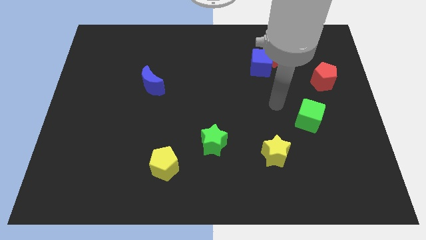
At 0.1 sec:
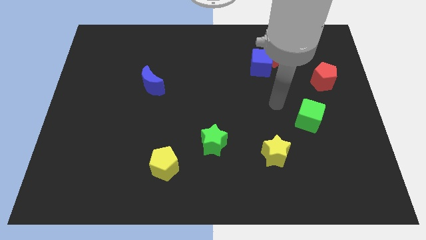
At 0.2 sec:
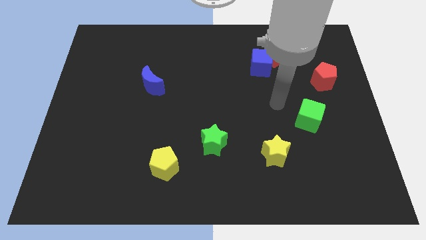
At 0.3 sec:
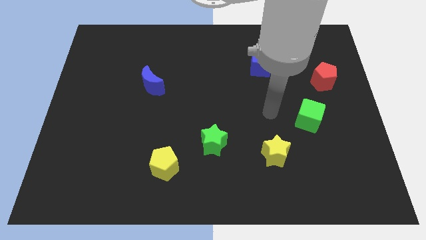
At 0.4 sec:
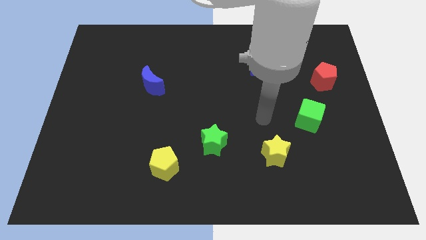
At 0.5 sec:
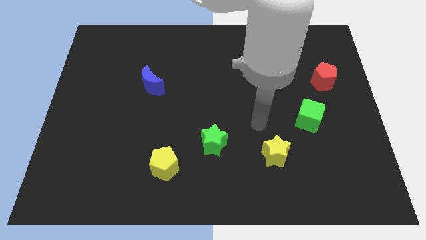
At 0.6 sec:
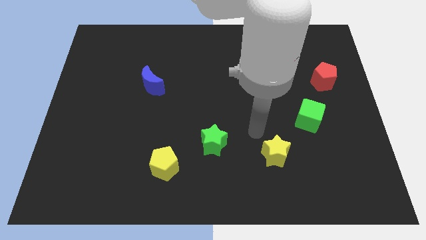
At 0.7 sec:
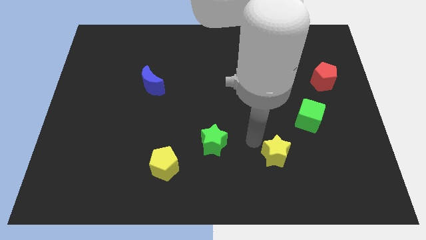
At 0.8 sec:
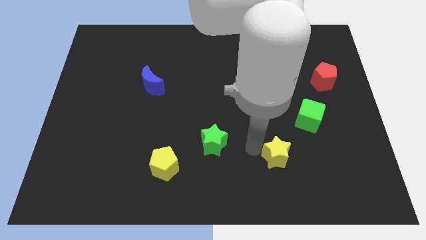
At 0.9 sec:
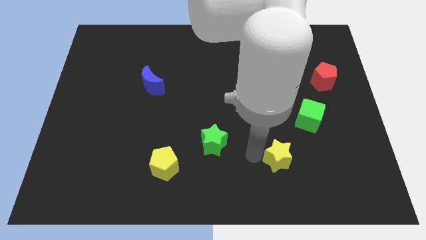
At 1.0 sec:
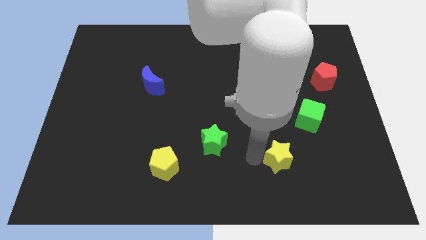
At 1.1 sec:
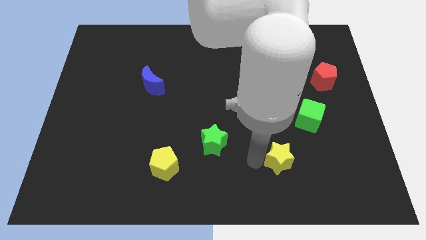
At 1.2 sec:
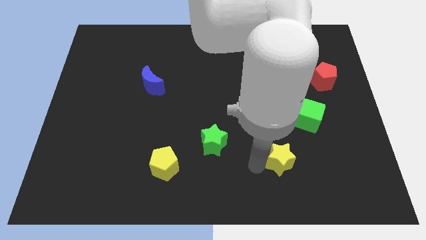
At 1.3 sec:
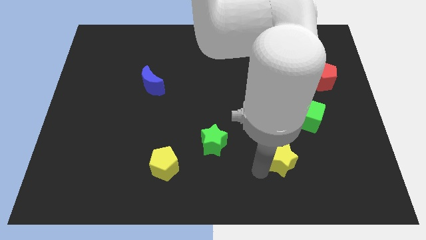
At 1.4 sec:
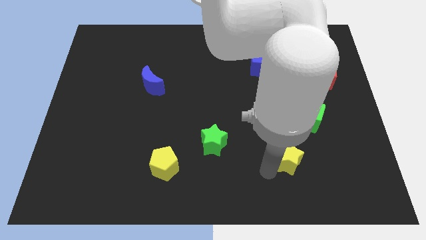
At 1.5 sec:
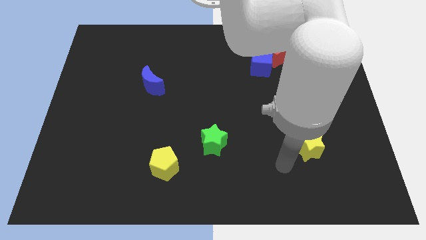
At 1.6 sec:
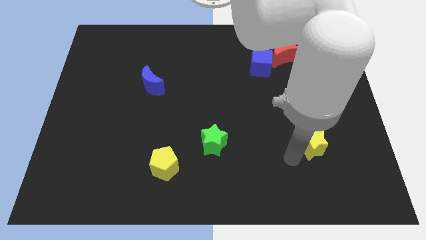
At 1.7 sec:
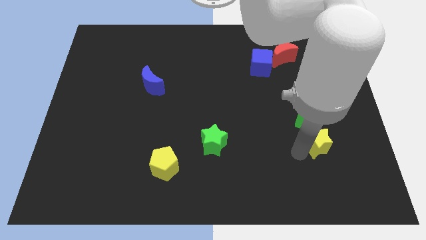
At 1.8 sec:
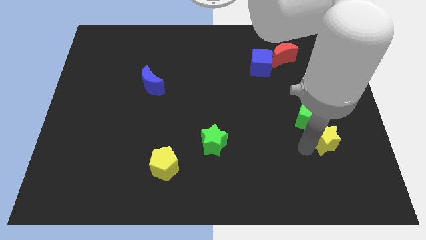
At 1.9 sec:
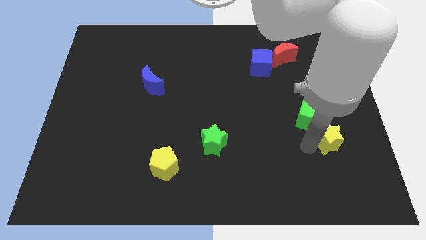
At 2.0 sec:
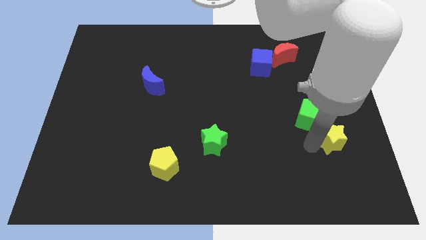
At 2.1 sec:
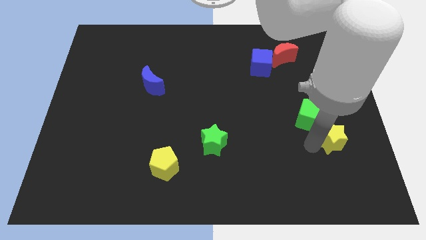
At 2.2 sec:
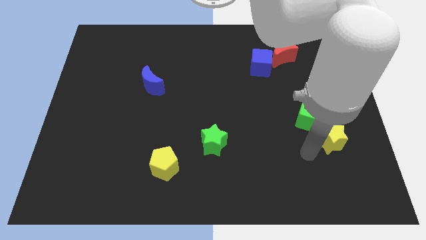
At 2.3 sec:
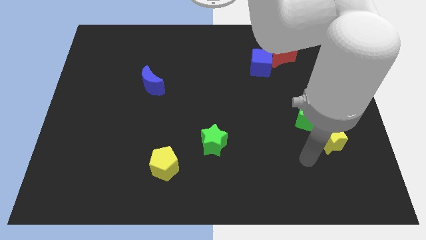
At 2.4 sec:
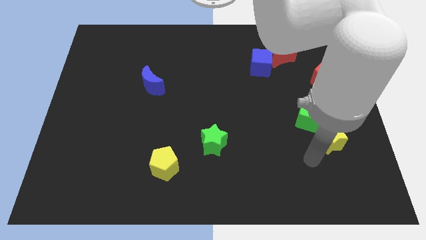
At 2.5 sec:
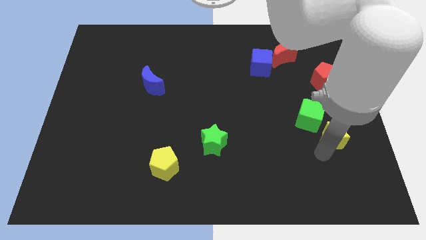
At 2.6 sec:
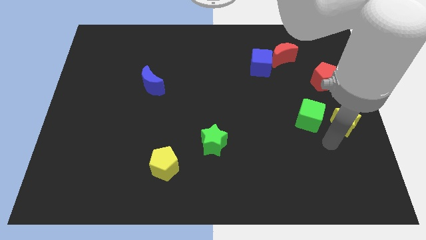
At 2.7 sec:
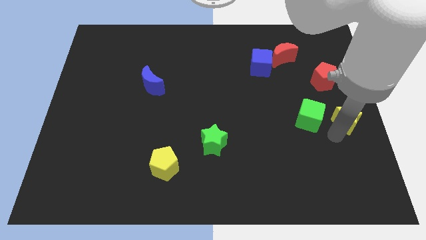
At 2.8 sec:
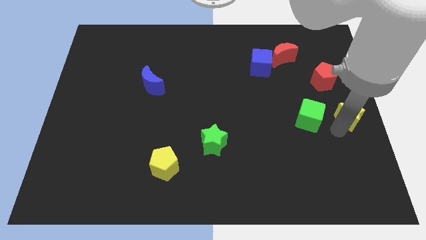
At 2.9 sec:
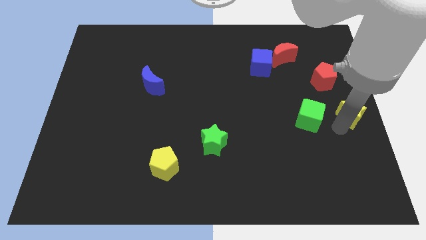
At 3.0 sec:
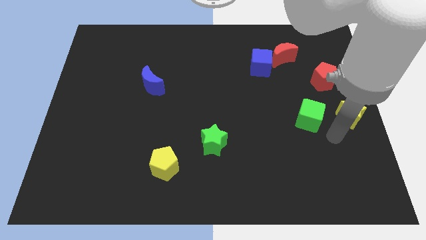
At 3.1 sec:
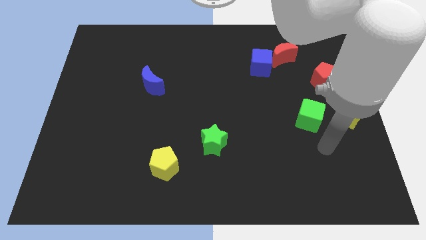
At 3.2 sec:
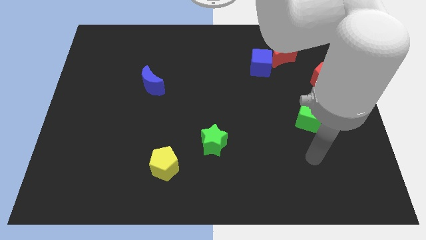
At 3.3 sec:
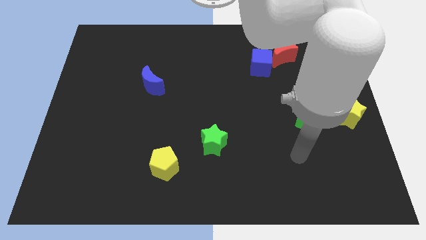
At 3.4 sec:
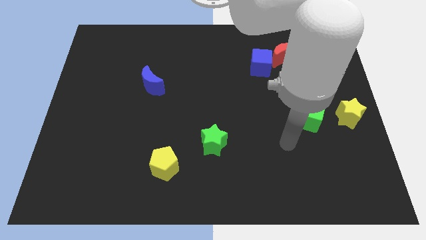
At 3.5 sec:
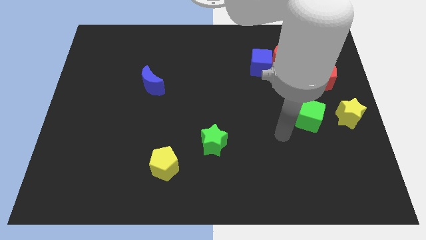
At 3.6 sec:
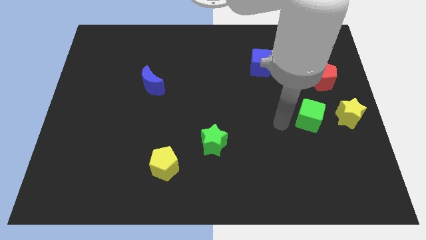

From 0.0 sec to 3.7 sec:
move the yellow star to the right of the green cube

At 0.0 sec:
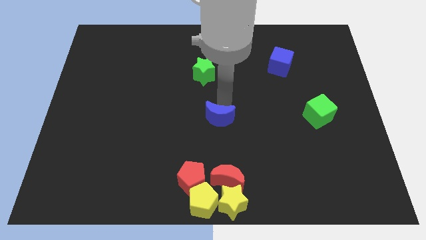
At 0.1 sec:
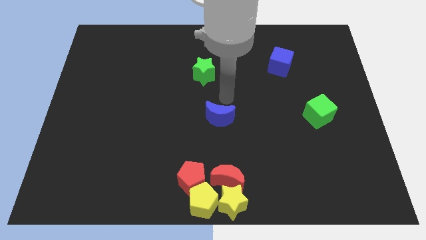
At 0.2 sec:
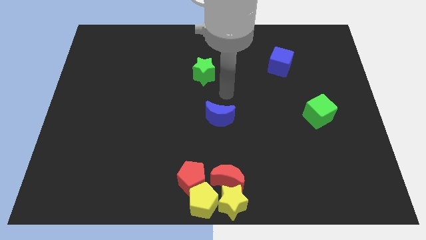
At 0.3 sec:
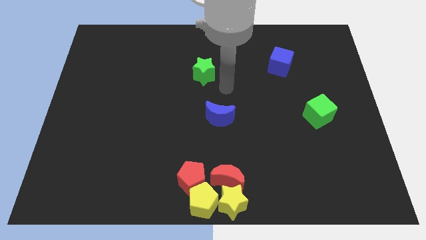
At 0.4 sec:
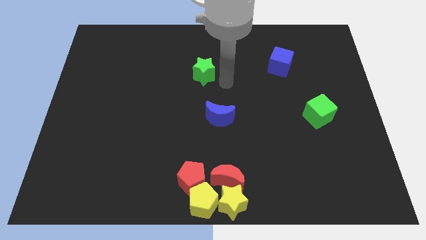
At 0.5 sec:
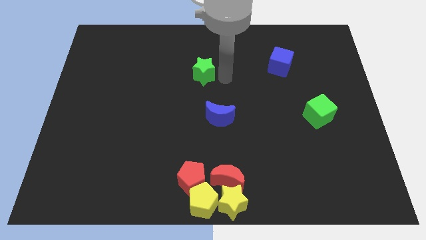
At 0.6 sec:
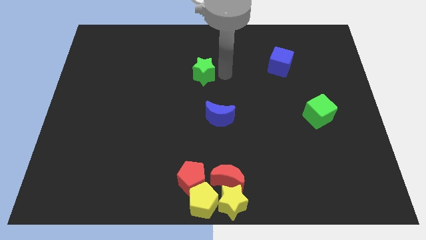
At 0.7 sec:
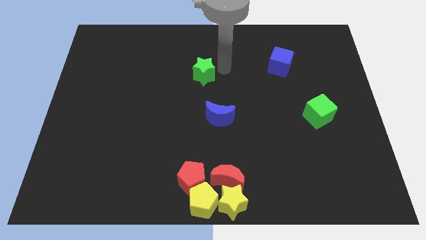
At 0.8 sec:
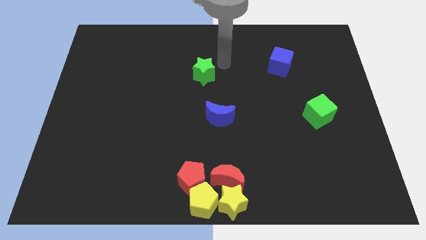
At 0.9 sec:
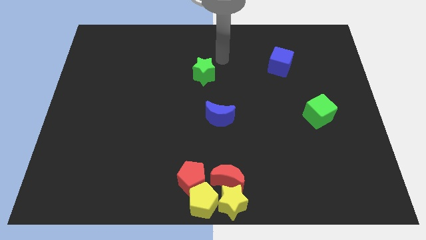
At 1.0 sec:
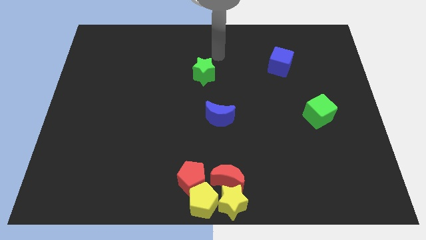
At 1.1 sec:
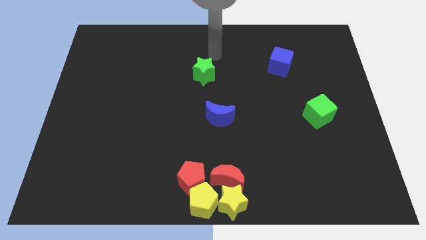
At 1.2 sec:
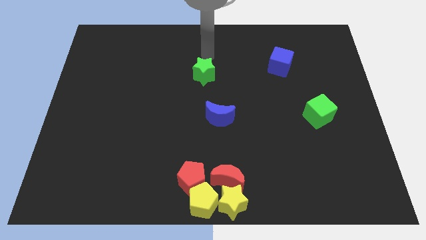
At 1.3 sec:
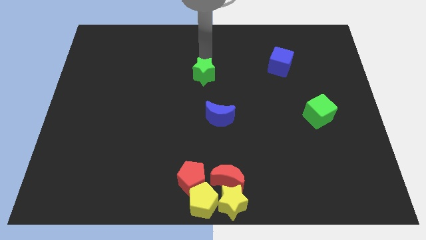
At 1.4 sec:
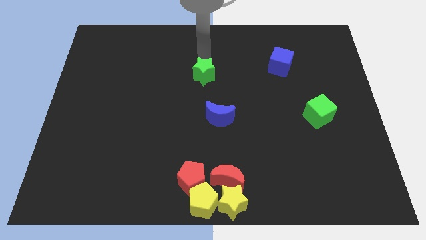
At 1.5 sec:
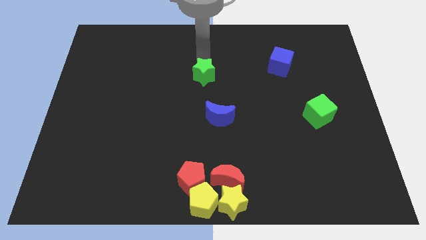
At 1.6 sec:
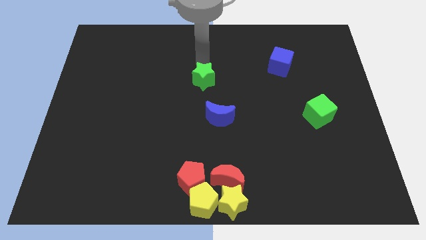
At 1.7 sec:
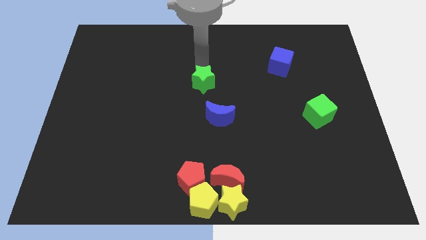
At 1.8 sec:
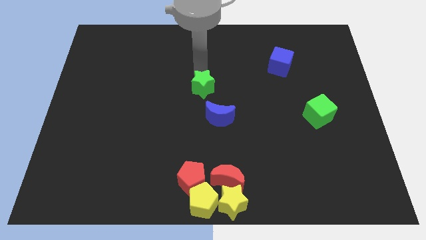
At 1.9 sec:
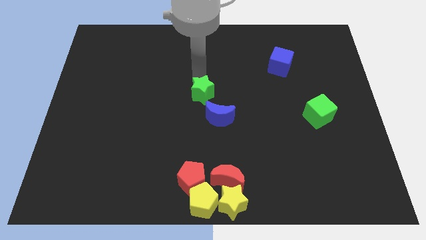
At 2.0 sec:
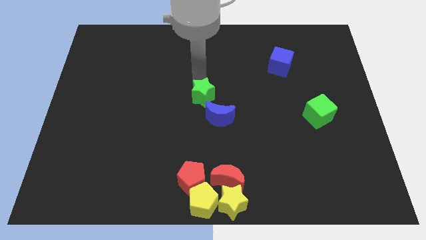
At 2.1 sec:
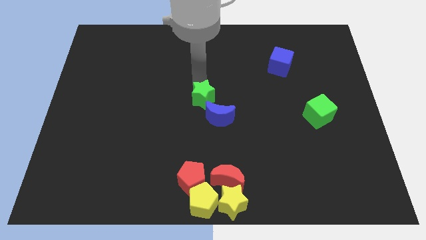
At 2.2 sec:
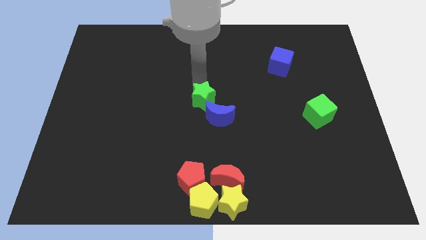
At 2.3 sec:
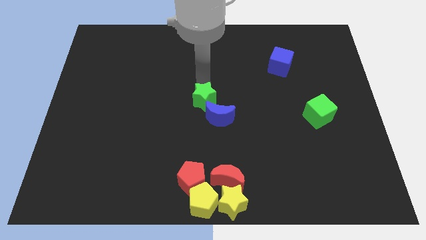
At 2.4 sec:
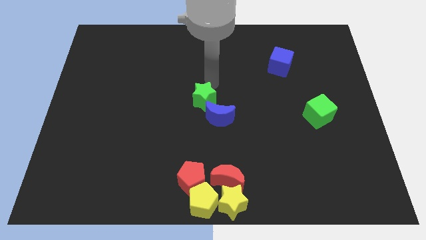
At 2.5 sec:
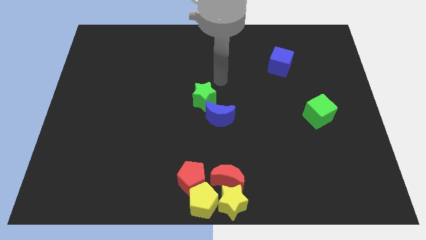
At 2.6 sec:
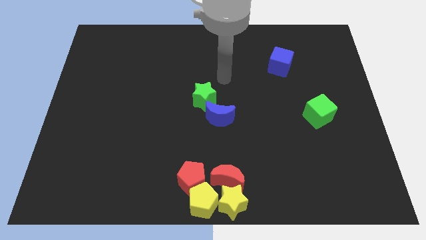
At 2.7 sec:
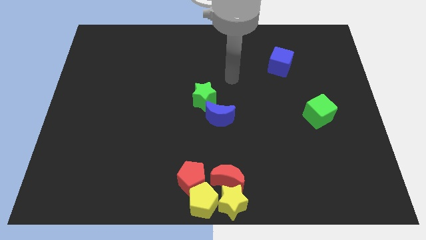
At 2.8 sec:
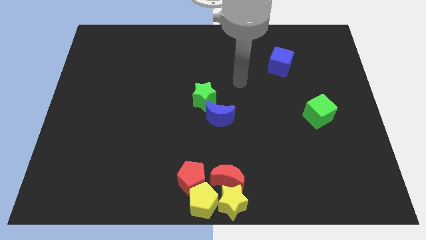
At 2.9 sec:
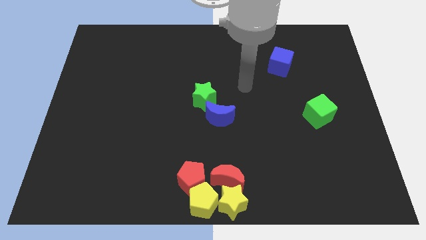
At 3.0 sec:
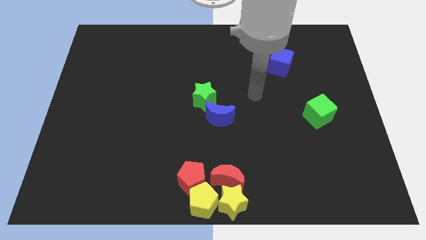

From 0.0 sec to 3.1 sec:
push the green star above the blue crescent

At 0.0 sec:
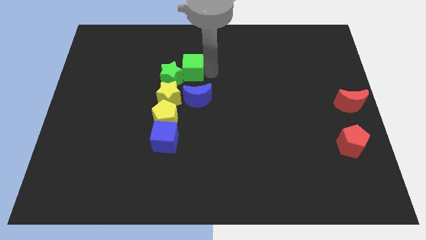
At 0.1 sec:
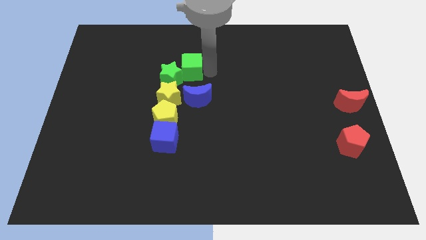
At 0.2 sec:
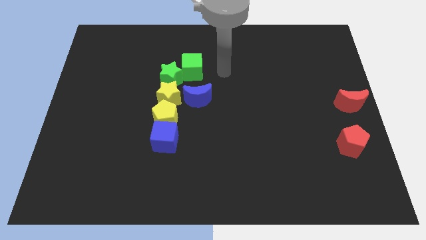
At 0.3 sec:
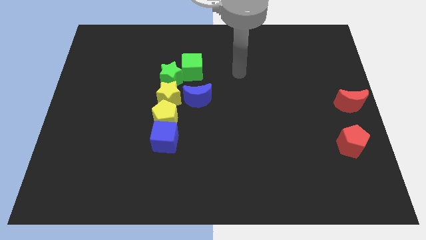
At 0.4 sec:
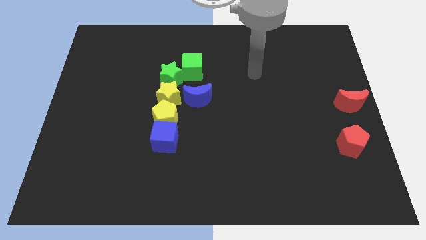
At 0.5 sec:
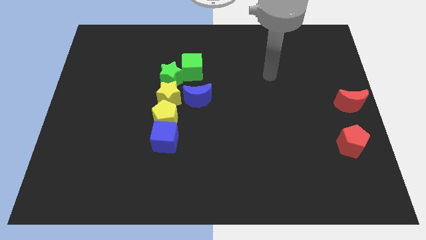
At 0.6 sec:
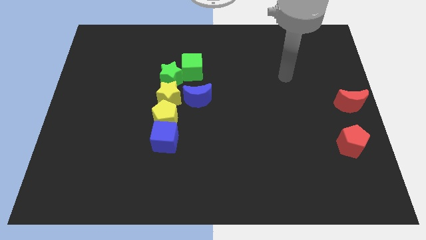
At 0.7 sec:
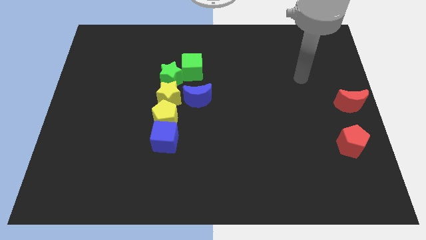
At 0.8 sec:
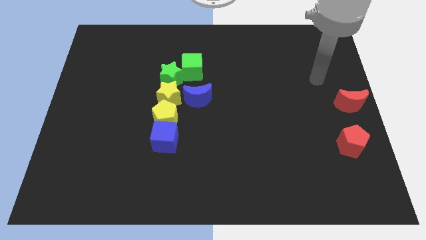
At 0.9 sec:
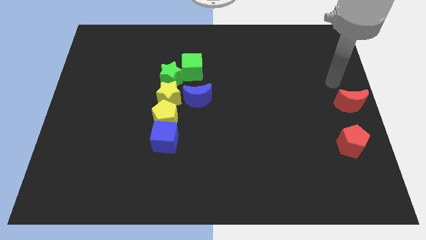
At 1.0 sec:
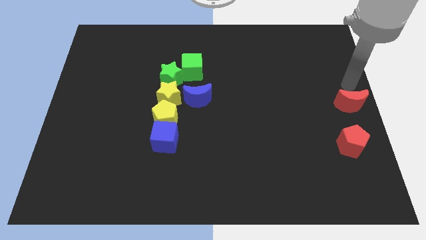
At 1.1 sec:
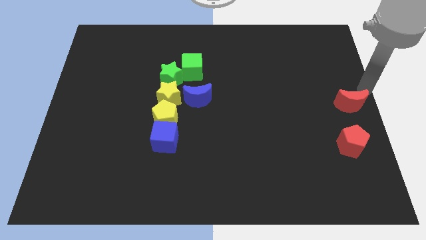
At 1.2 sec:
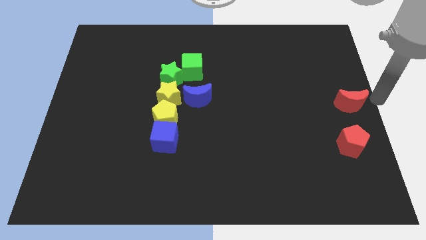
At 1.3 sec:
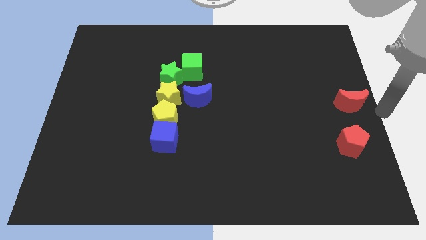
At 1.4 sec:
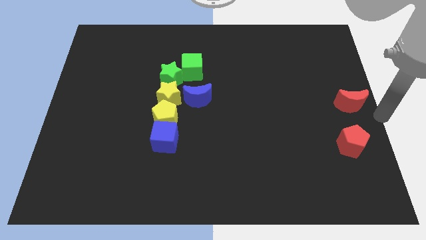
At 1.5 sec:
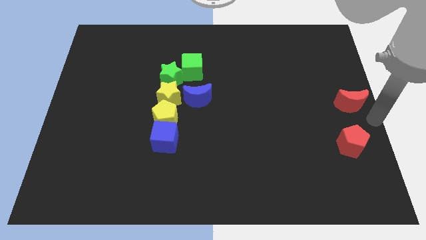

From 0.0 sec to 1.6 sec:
move your arm away from the green cube

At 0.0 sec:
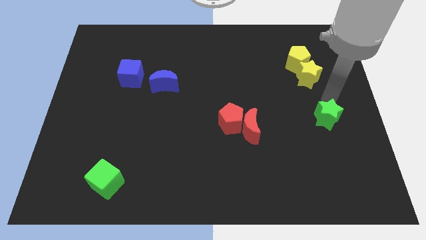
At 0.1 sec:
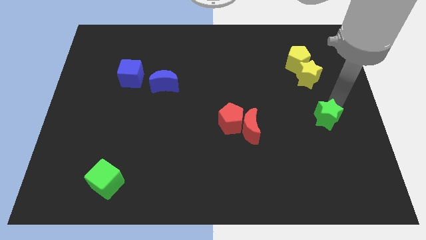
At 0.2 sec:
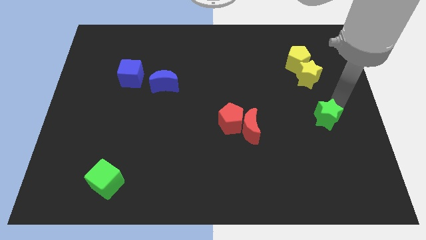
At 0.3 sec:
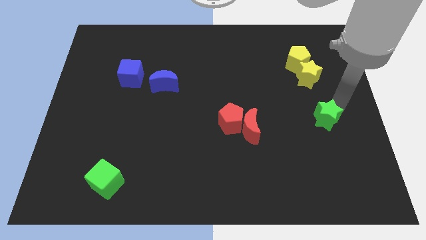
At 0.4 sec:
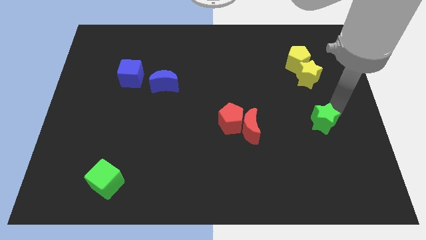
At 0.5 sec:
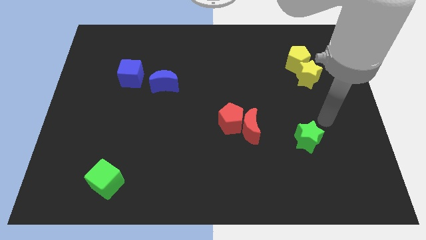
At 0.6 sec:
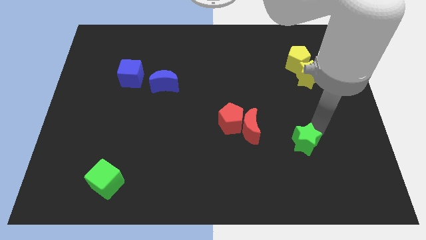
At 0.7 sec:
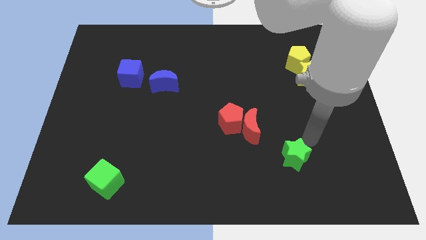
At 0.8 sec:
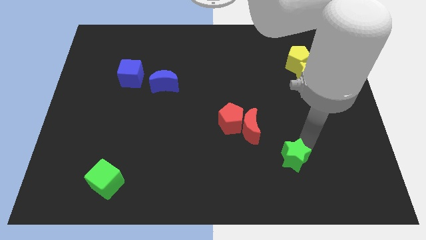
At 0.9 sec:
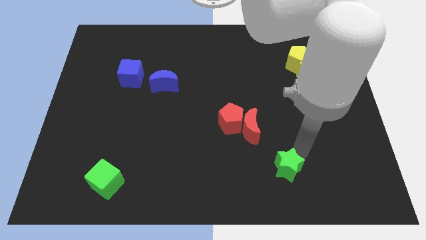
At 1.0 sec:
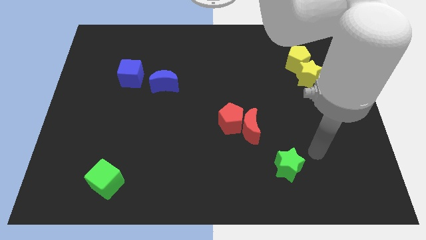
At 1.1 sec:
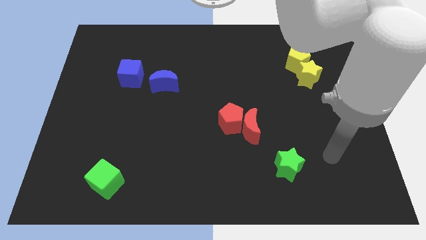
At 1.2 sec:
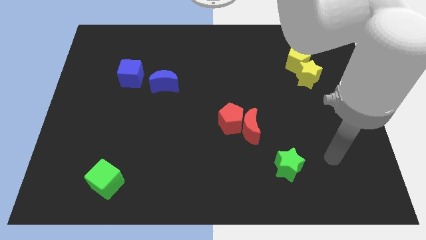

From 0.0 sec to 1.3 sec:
push the green star to the bottom right of the red crescent
